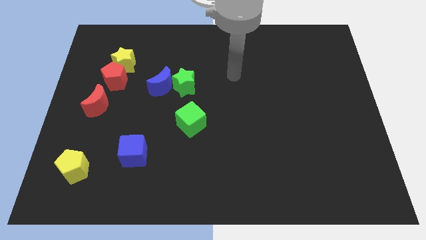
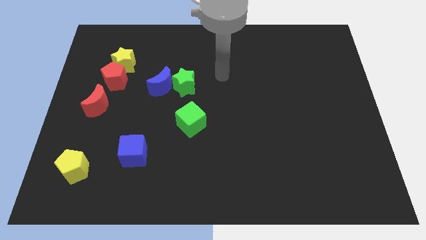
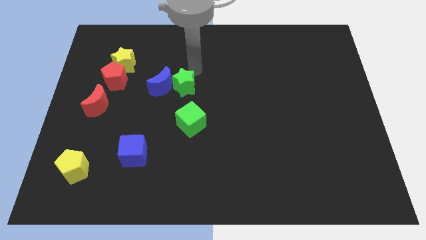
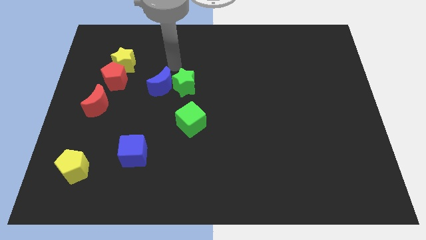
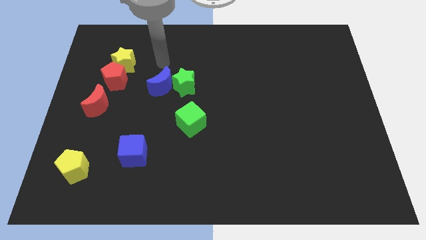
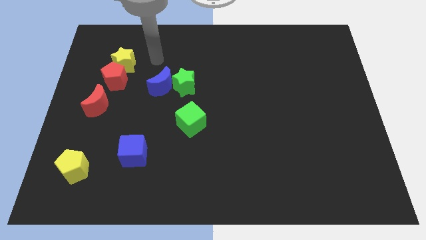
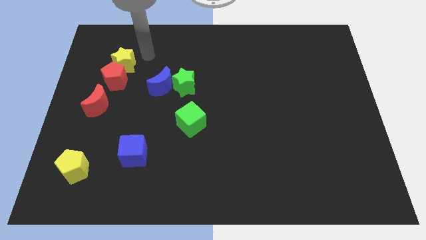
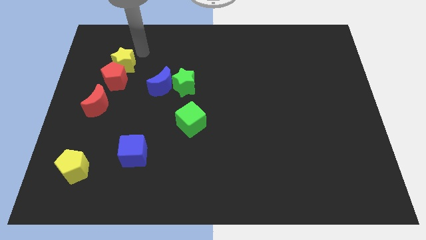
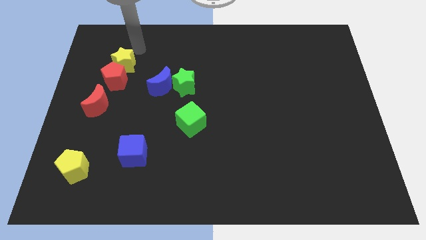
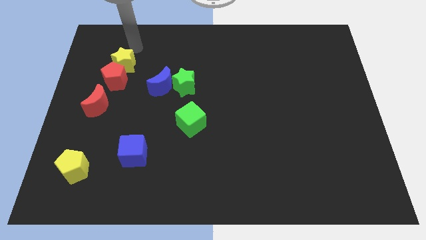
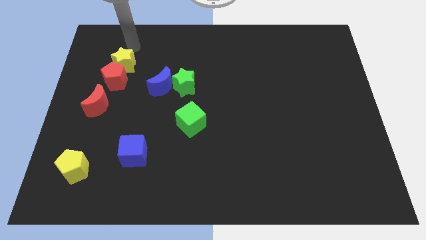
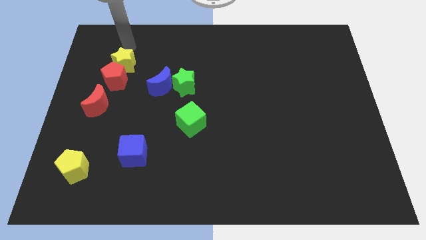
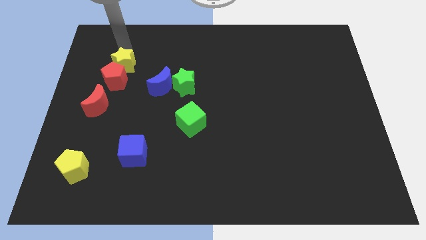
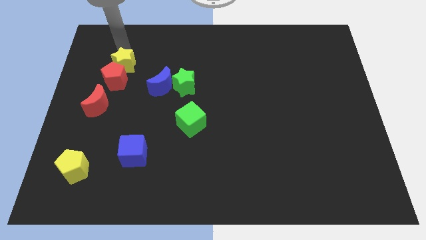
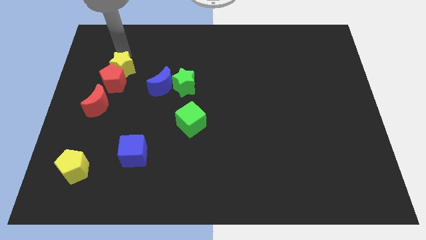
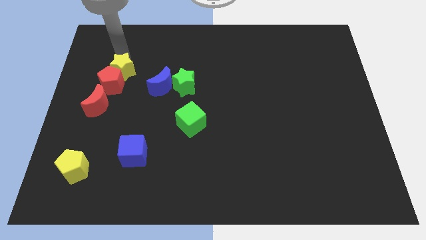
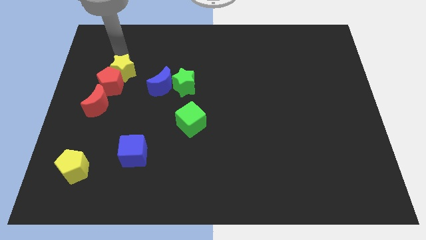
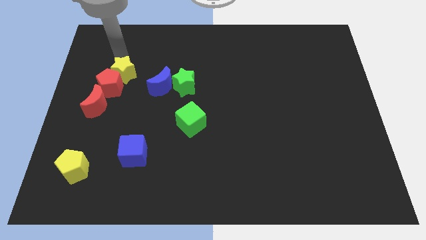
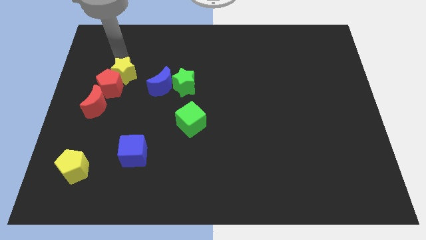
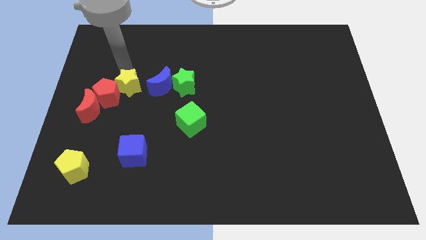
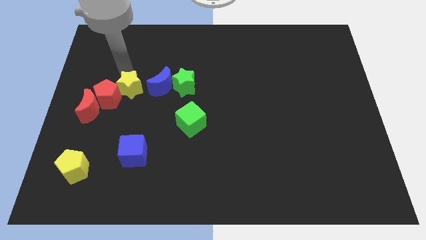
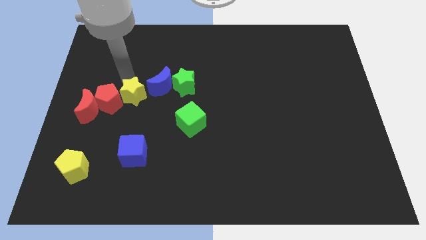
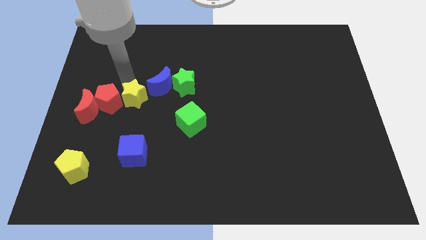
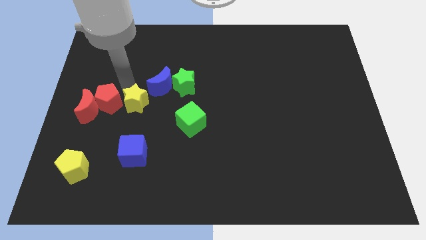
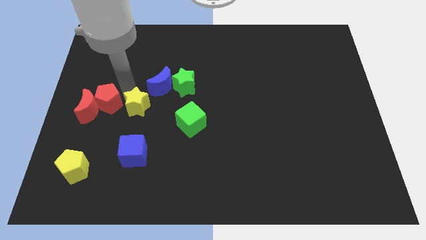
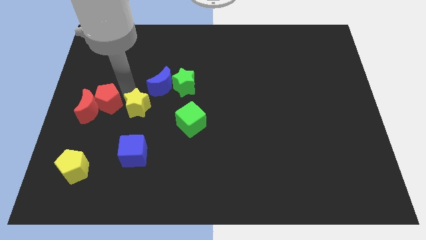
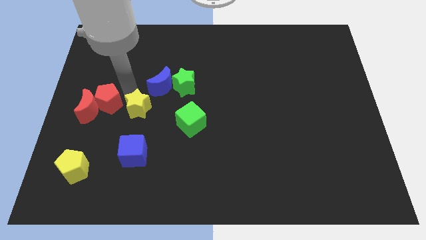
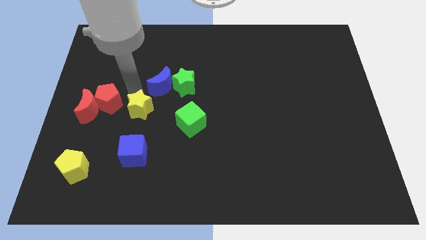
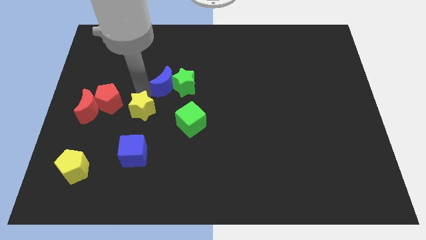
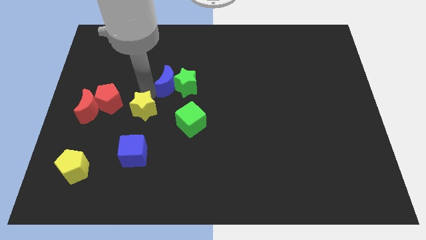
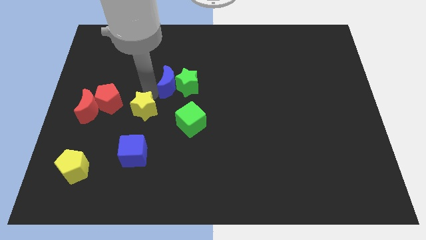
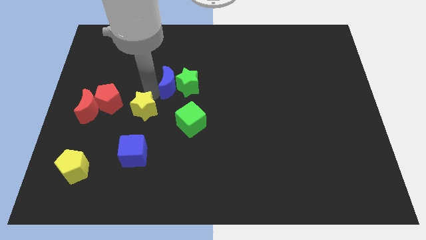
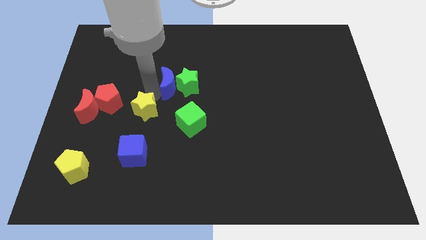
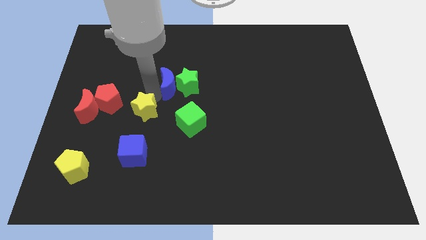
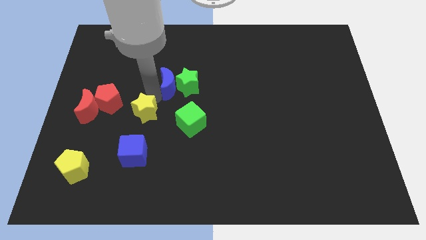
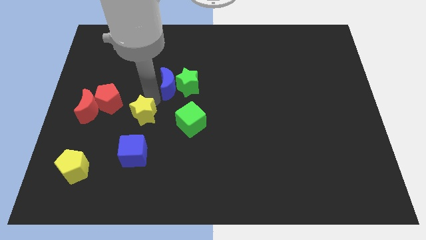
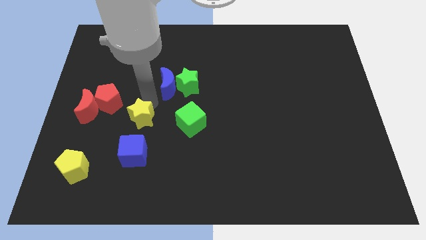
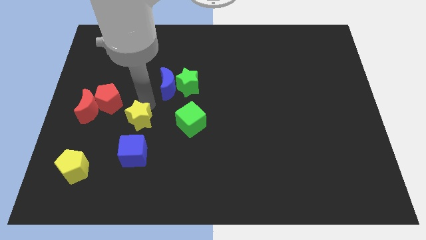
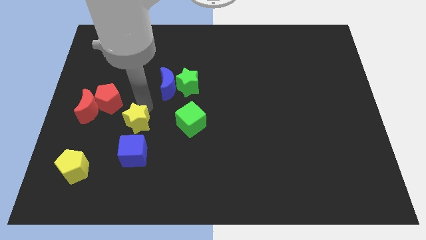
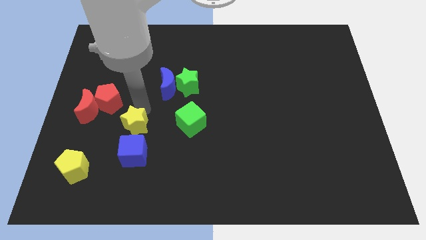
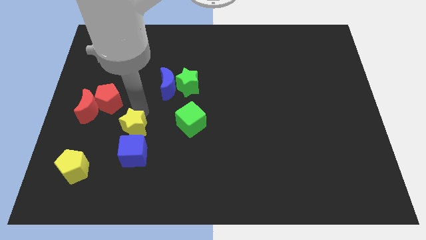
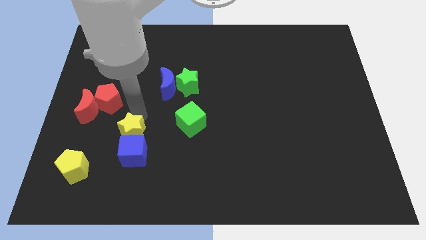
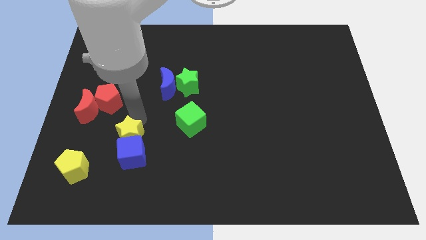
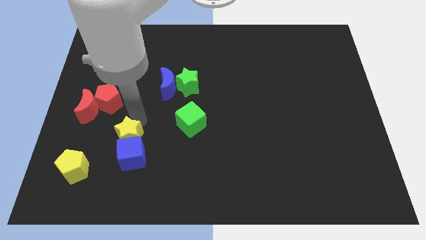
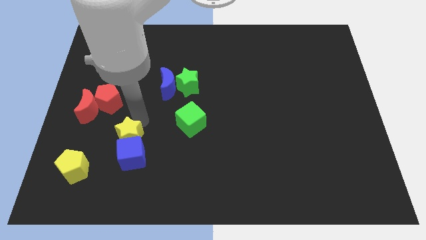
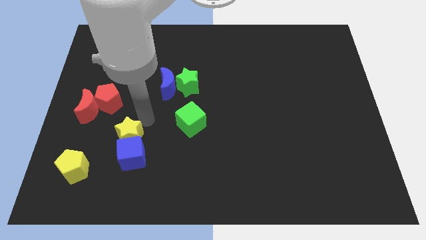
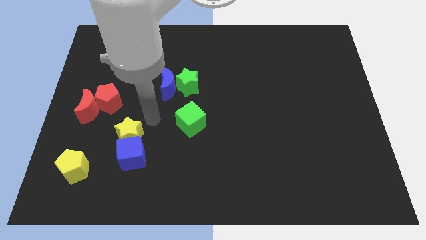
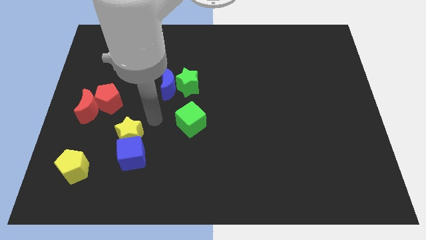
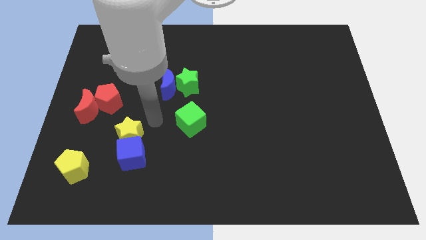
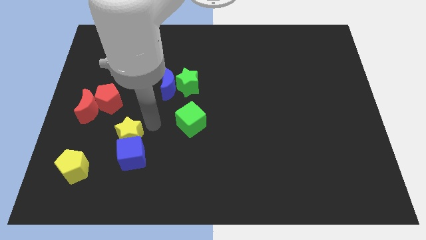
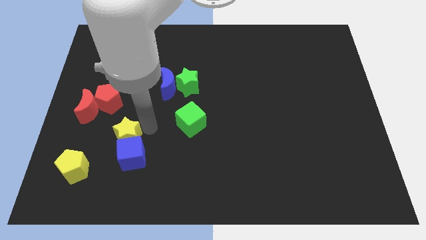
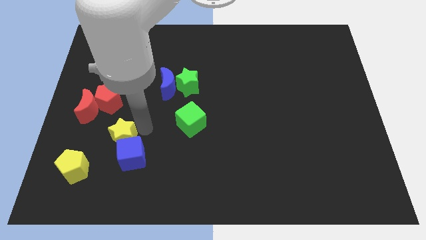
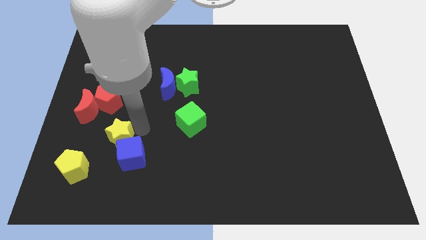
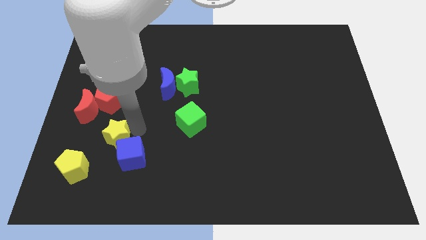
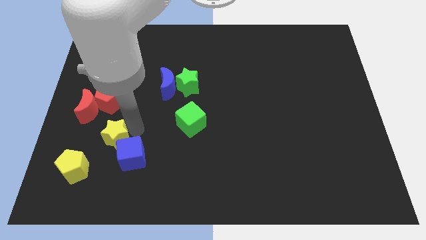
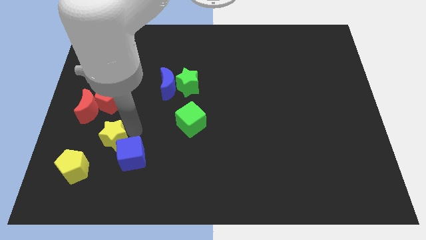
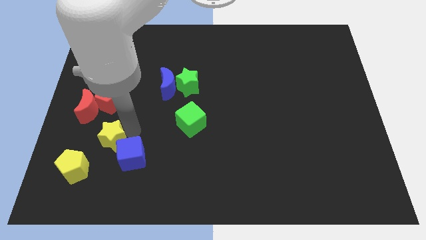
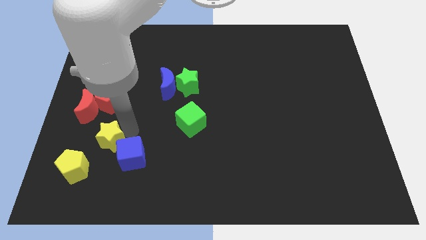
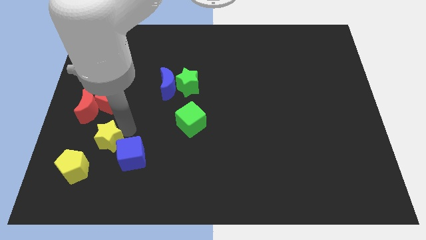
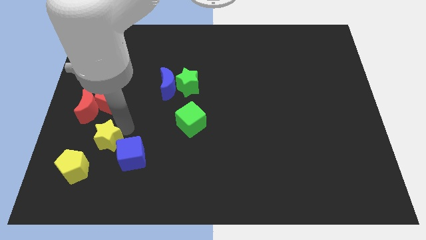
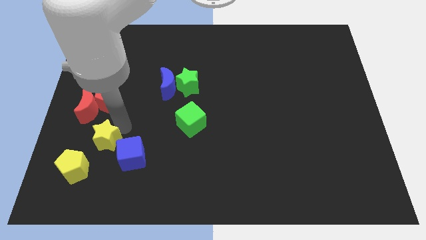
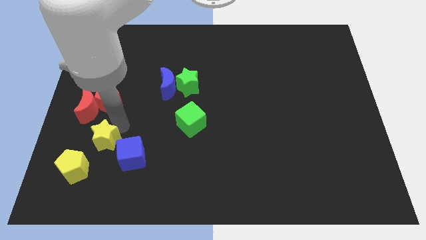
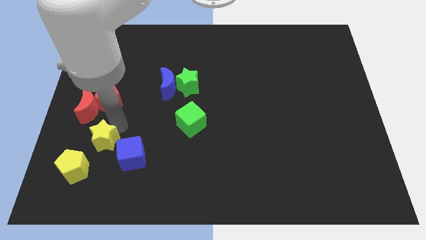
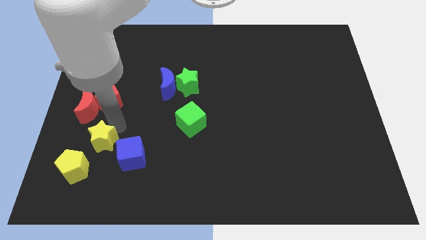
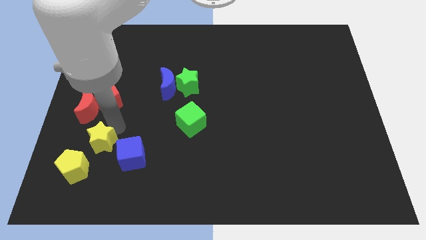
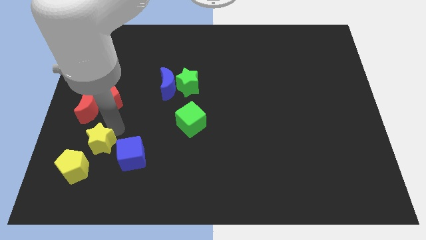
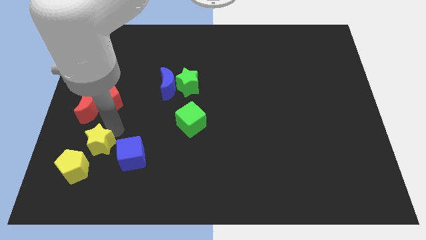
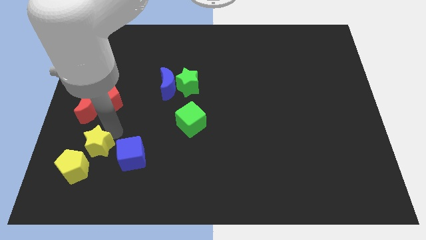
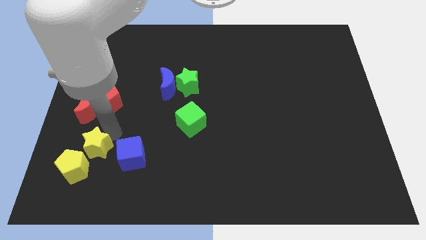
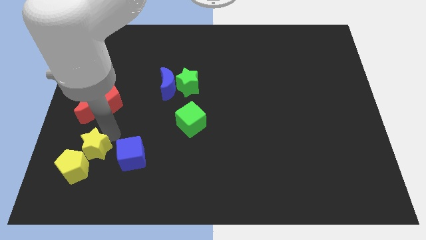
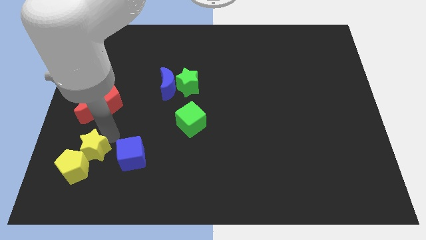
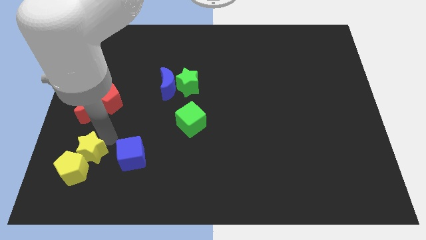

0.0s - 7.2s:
slide the yellow star close to the yellow pentagon

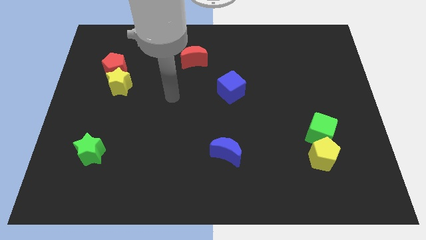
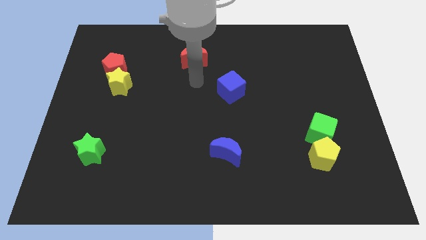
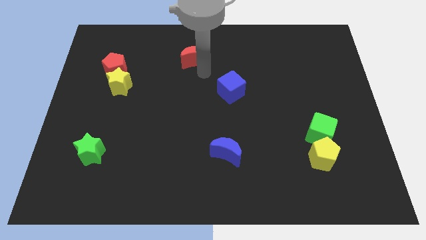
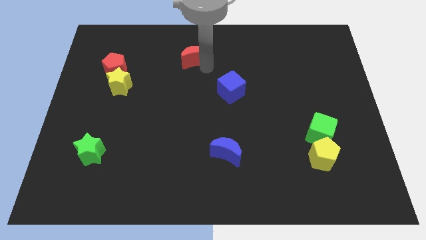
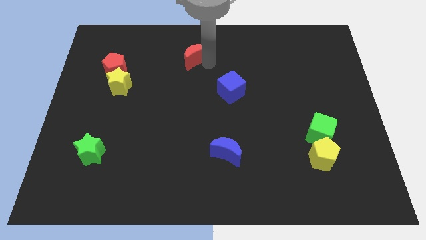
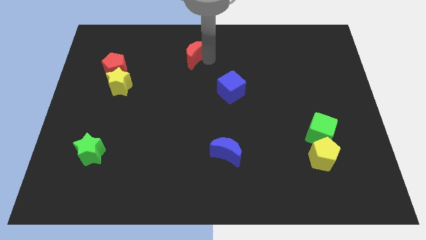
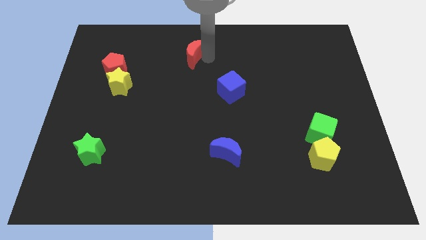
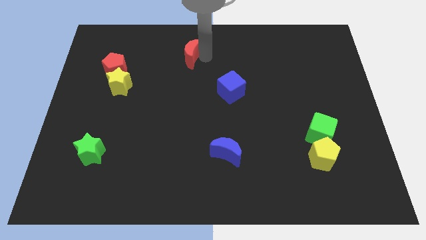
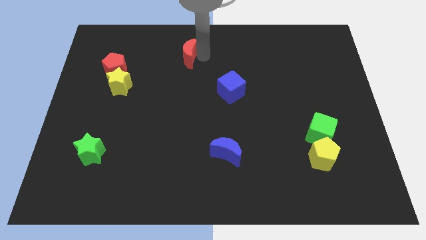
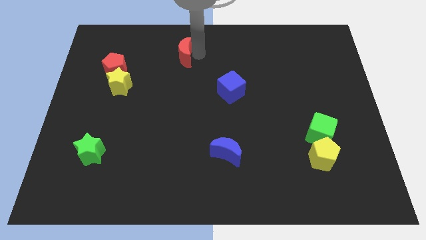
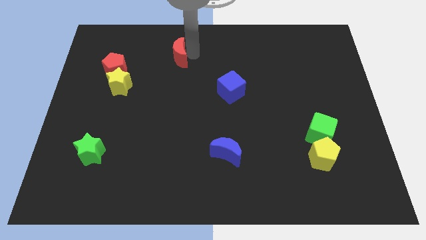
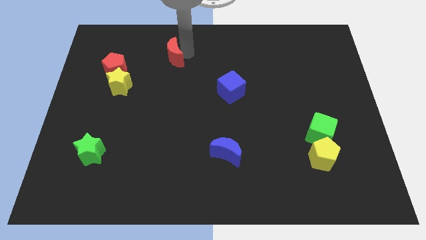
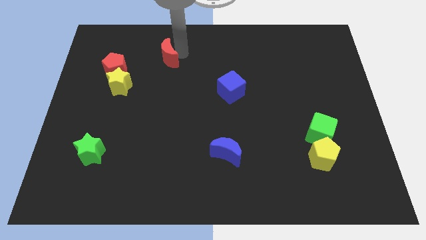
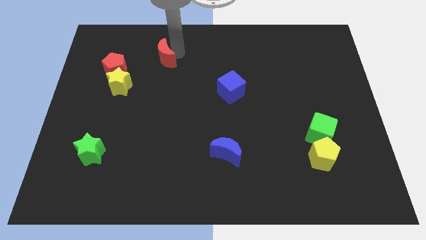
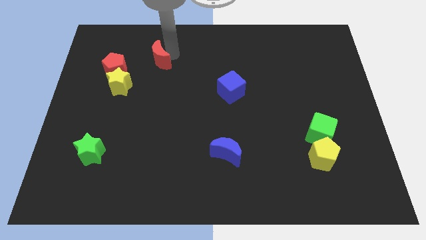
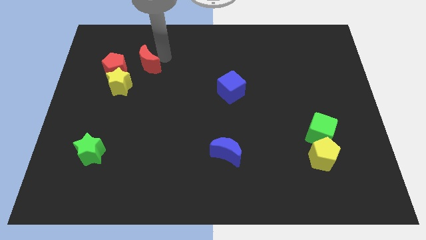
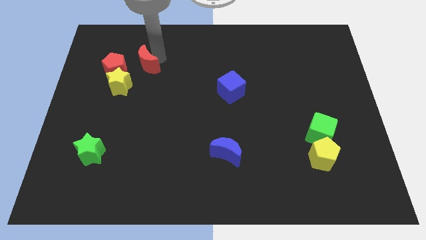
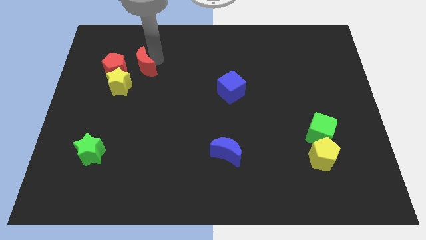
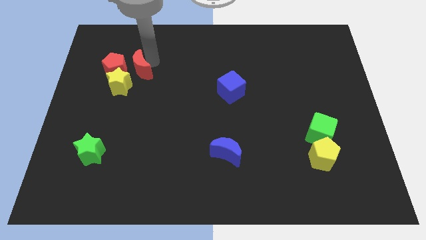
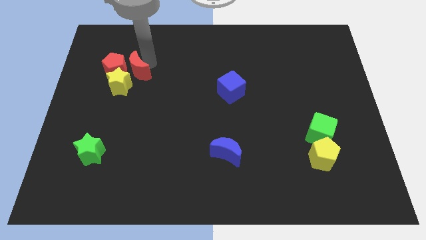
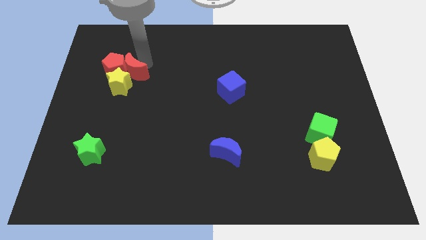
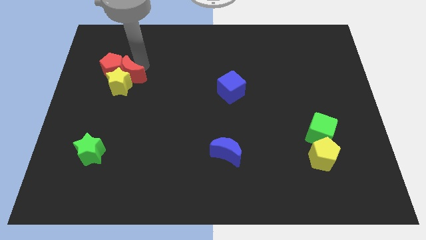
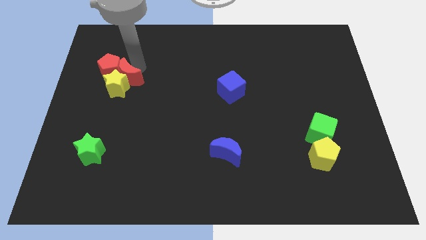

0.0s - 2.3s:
push the red moon towards the yellow star
